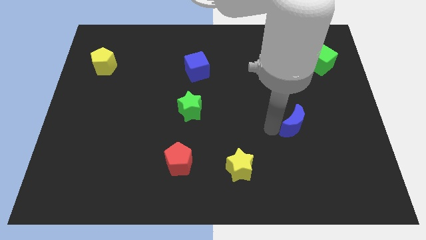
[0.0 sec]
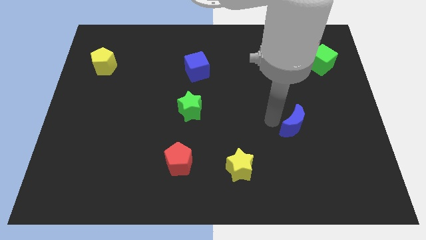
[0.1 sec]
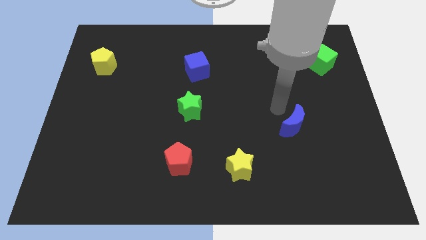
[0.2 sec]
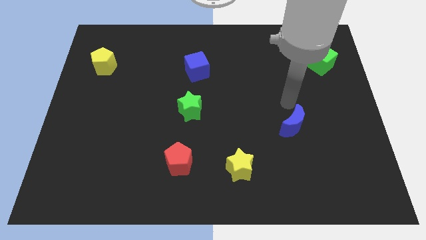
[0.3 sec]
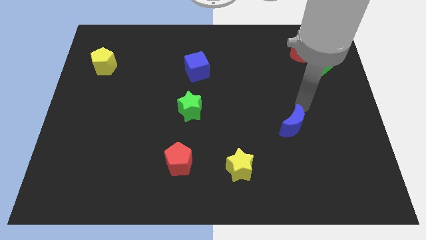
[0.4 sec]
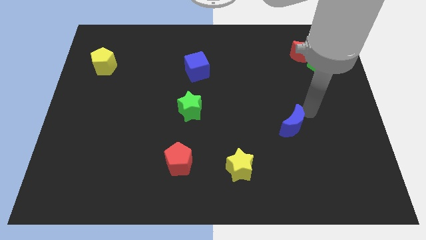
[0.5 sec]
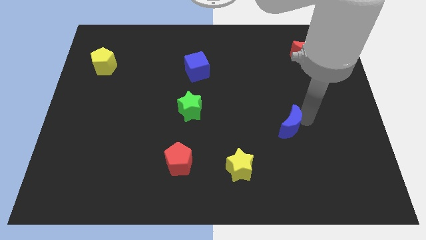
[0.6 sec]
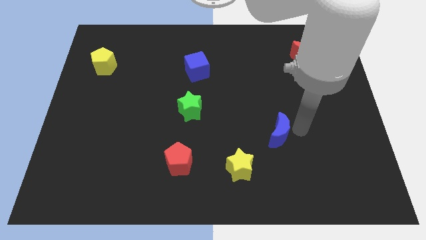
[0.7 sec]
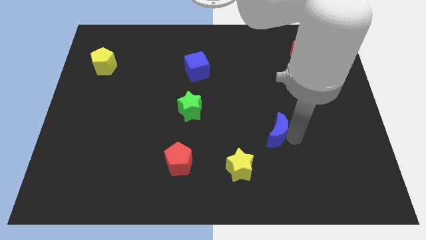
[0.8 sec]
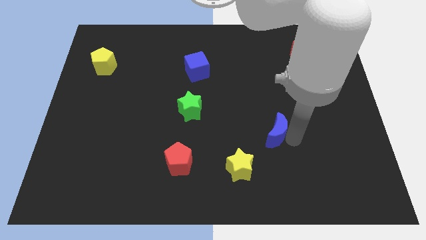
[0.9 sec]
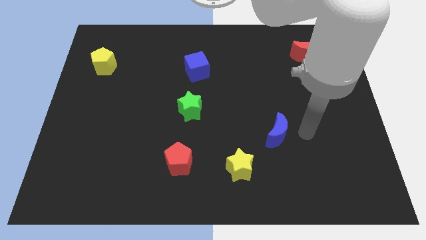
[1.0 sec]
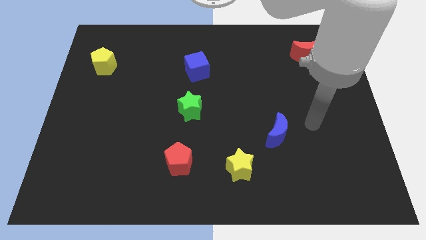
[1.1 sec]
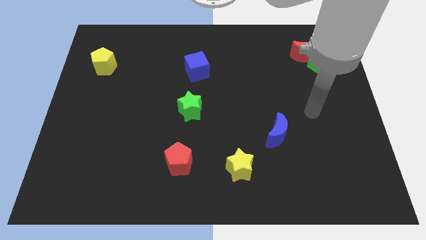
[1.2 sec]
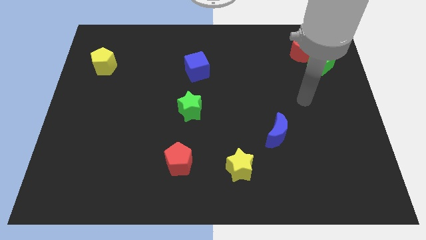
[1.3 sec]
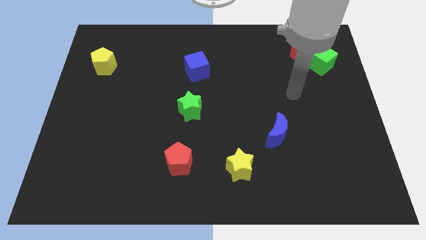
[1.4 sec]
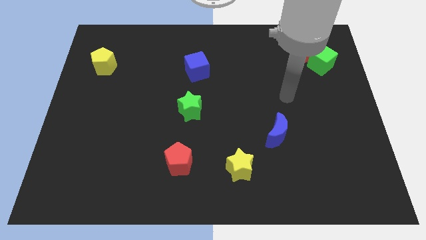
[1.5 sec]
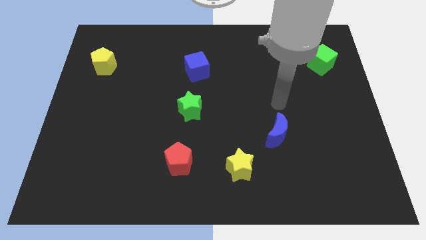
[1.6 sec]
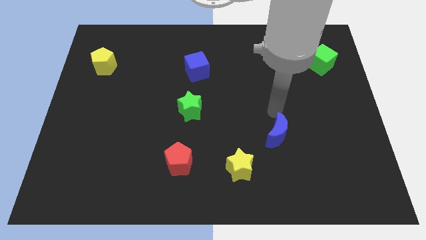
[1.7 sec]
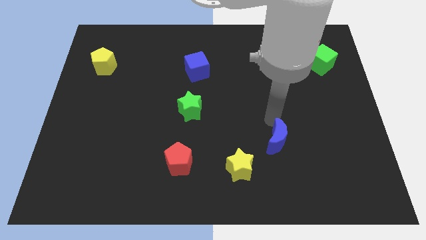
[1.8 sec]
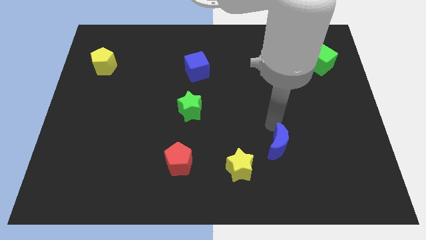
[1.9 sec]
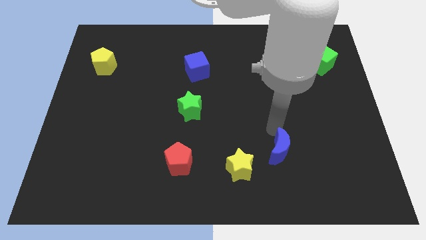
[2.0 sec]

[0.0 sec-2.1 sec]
slide the blue moon slightly down

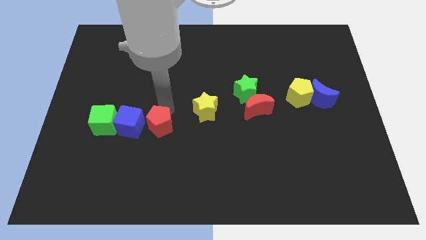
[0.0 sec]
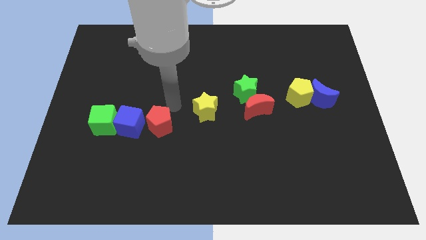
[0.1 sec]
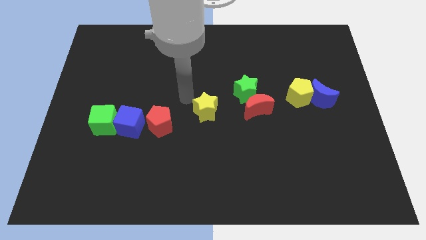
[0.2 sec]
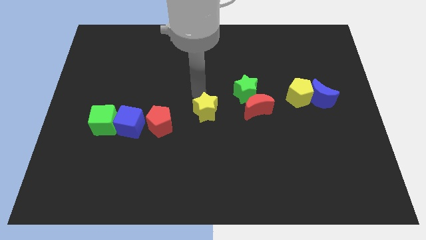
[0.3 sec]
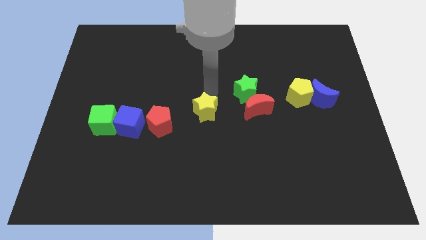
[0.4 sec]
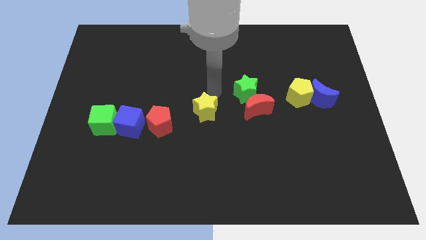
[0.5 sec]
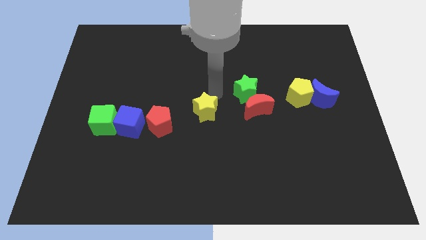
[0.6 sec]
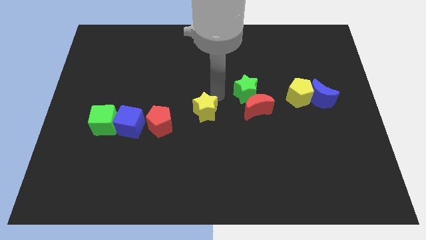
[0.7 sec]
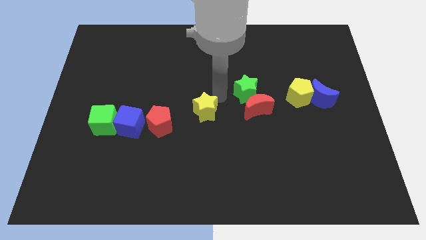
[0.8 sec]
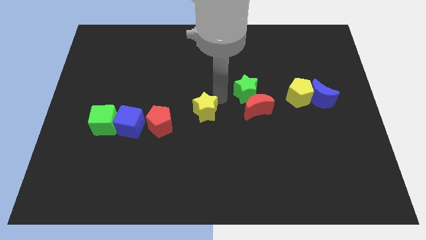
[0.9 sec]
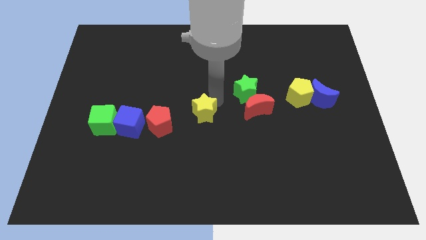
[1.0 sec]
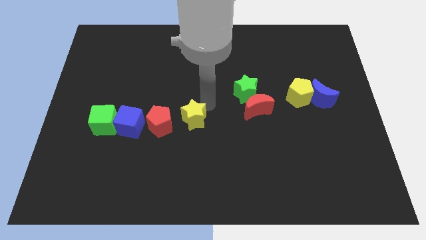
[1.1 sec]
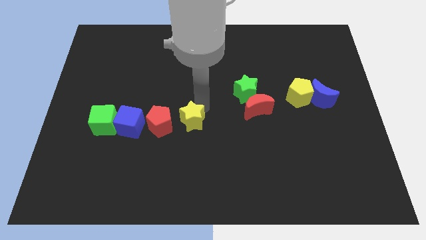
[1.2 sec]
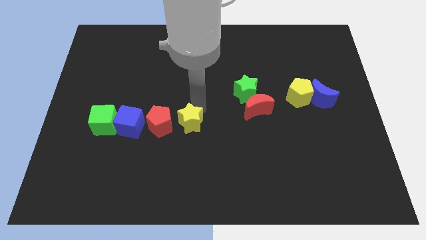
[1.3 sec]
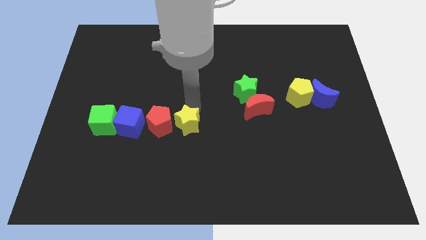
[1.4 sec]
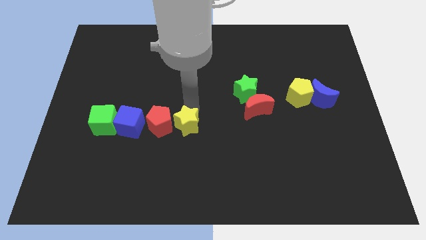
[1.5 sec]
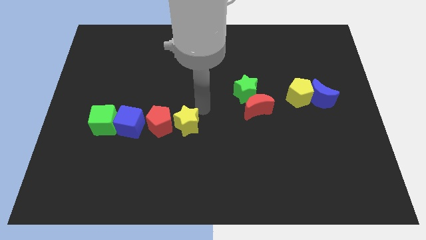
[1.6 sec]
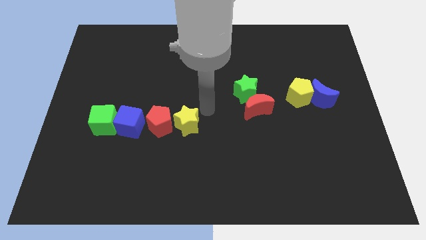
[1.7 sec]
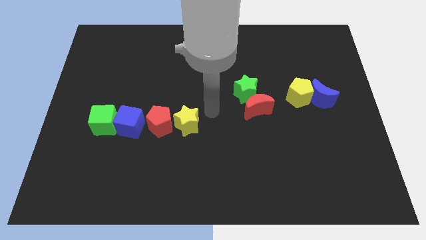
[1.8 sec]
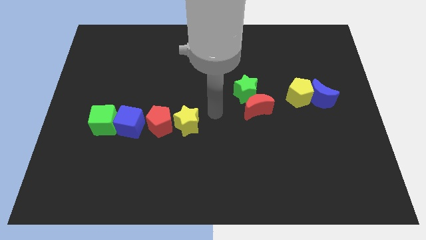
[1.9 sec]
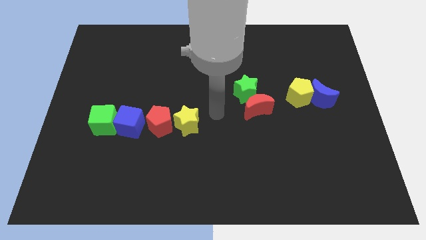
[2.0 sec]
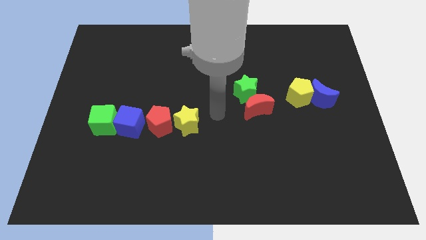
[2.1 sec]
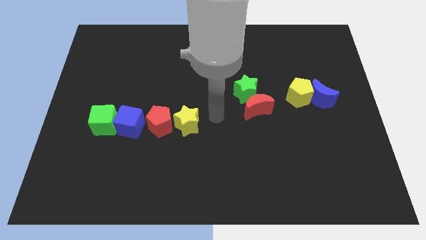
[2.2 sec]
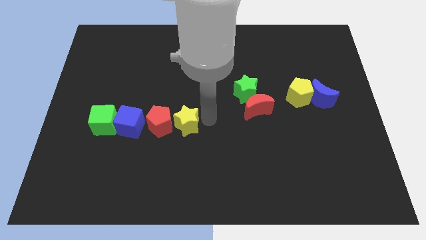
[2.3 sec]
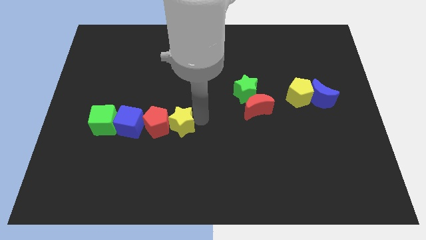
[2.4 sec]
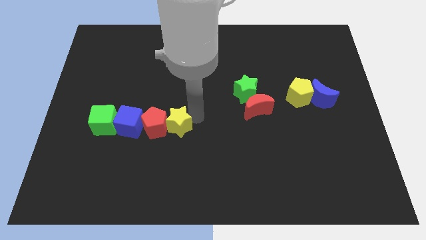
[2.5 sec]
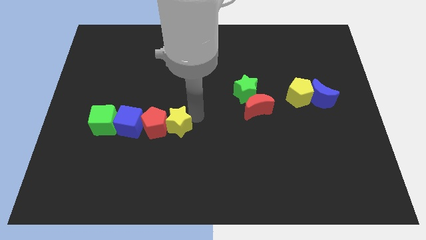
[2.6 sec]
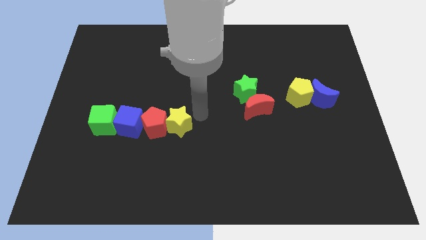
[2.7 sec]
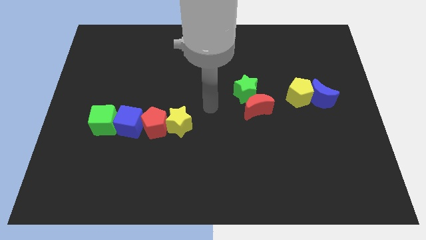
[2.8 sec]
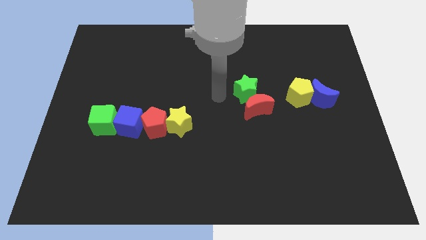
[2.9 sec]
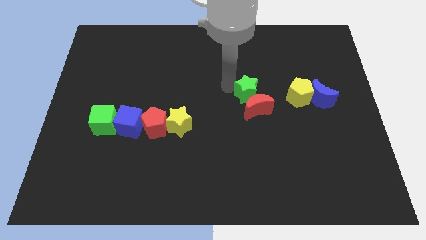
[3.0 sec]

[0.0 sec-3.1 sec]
move the yellow star into the red pentagon to form a horizontal line of blocks

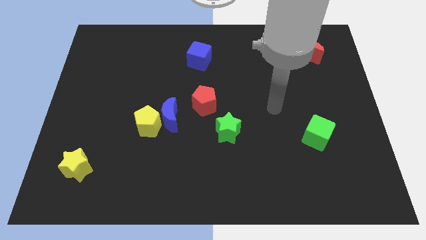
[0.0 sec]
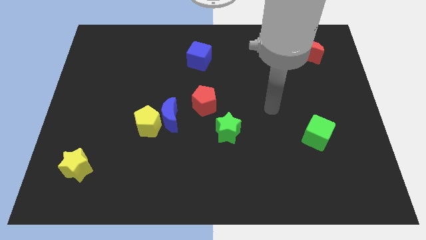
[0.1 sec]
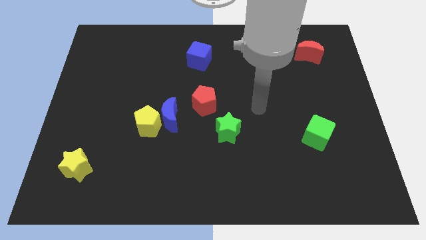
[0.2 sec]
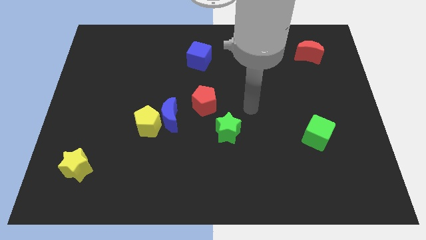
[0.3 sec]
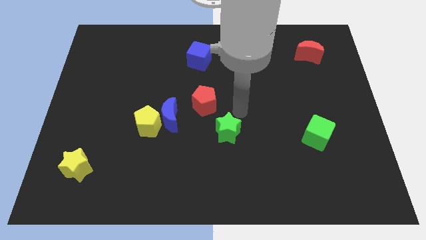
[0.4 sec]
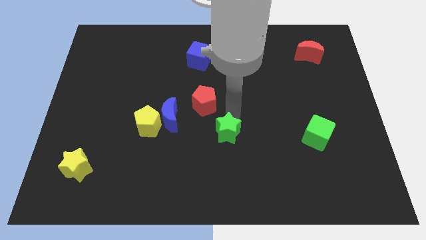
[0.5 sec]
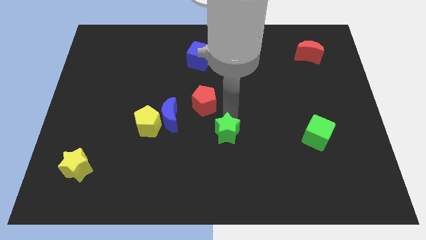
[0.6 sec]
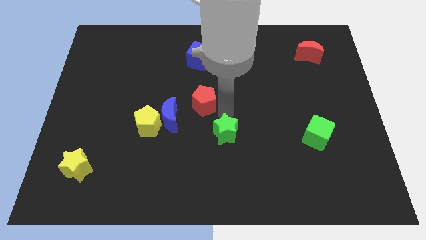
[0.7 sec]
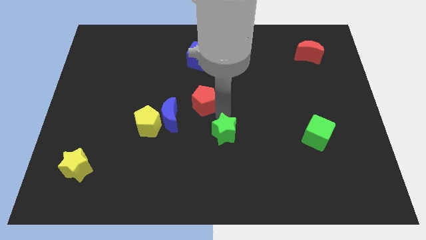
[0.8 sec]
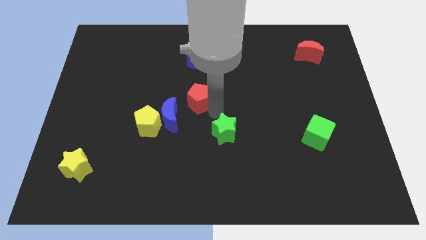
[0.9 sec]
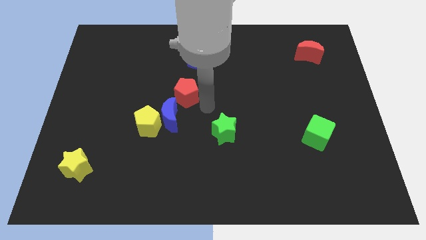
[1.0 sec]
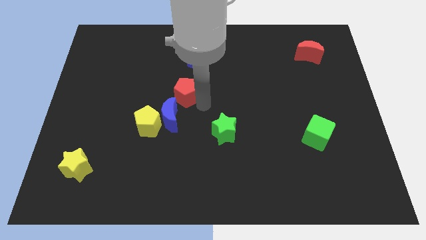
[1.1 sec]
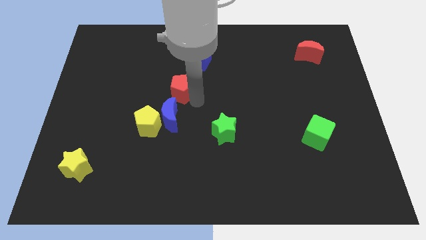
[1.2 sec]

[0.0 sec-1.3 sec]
slide the red pentagon above the blue moon

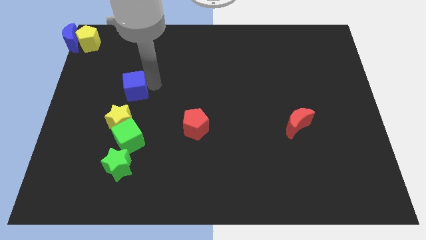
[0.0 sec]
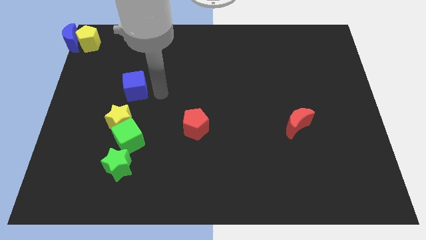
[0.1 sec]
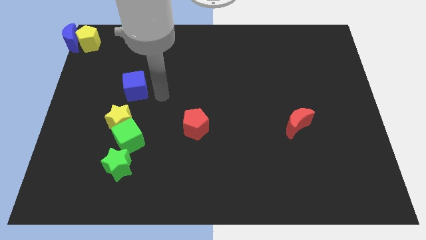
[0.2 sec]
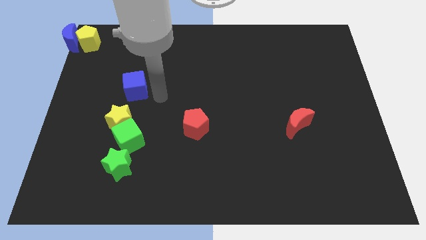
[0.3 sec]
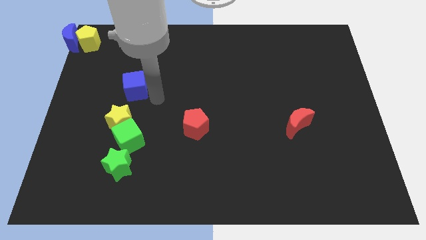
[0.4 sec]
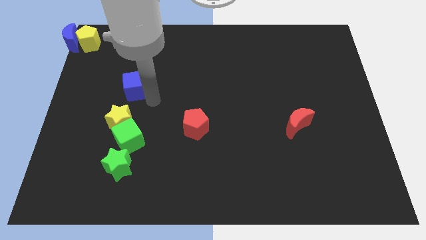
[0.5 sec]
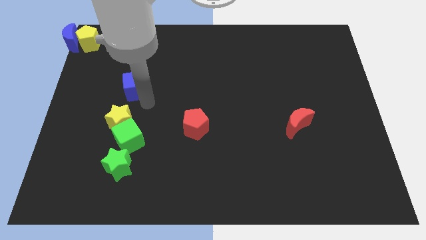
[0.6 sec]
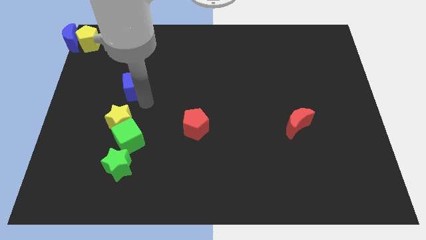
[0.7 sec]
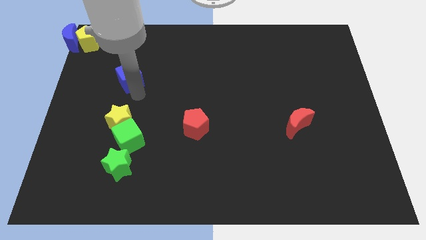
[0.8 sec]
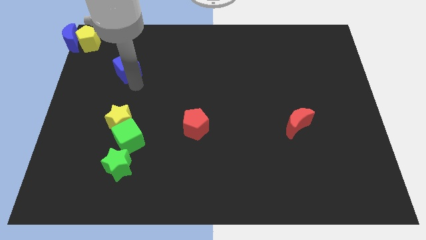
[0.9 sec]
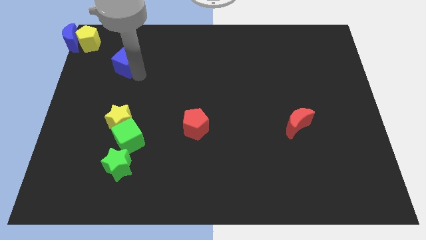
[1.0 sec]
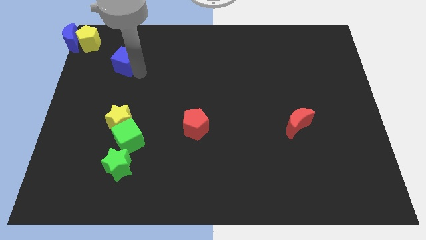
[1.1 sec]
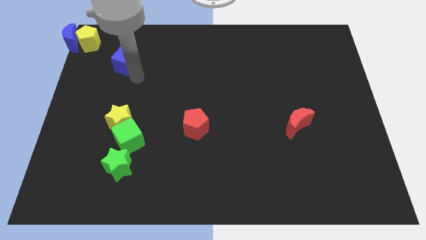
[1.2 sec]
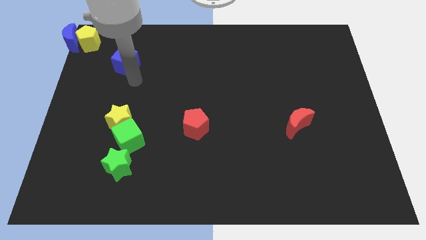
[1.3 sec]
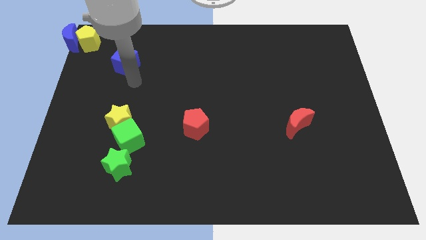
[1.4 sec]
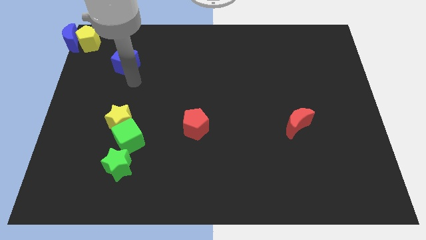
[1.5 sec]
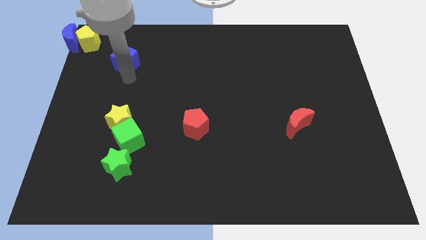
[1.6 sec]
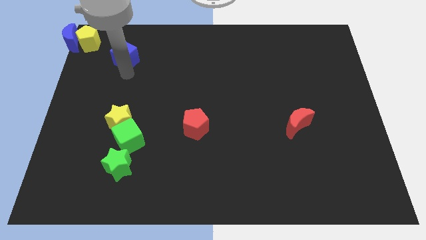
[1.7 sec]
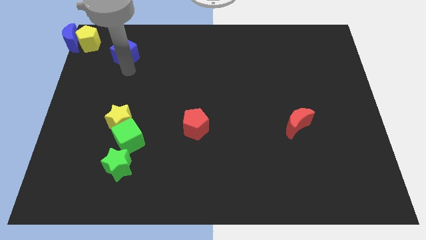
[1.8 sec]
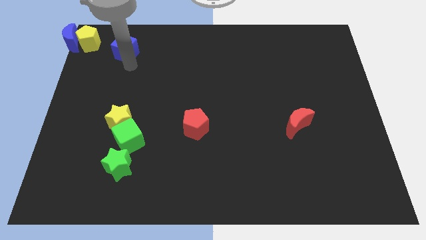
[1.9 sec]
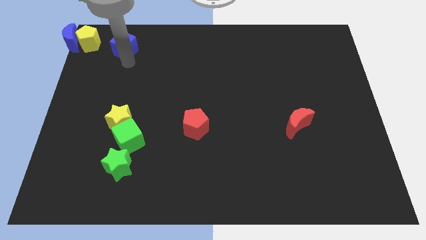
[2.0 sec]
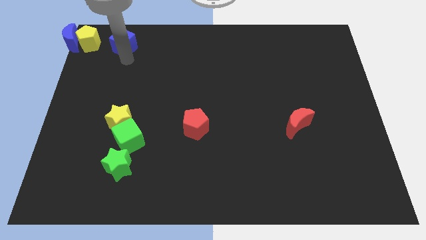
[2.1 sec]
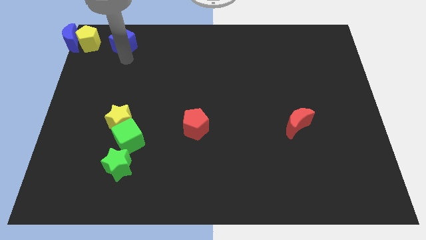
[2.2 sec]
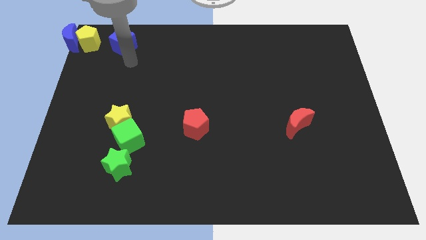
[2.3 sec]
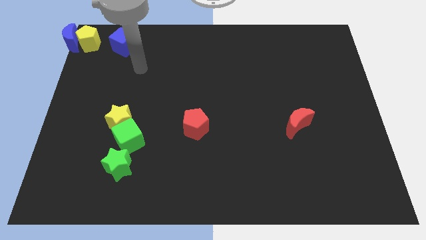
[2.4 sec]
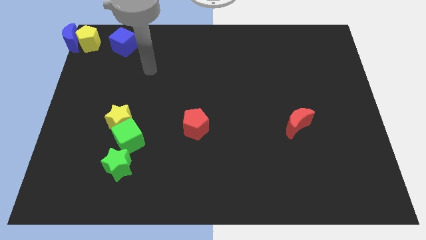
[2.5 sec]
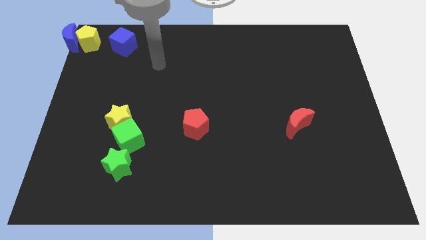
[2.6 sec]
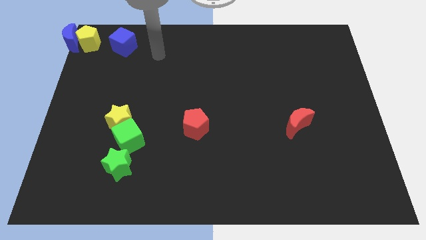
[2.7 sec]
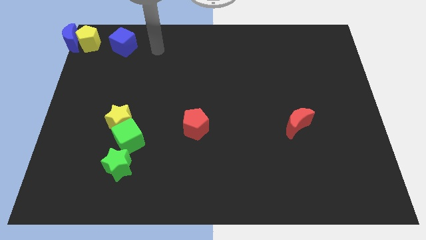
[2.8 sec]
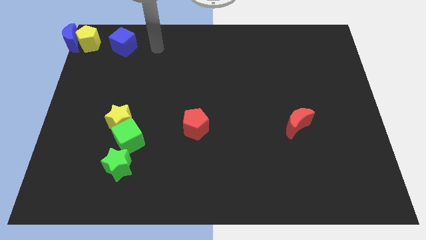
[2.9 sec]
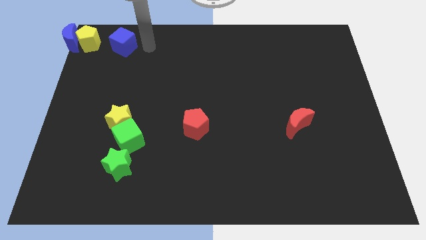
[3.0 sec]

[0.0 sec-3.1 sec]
place the blue cube to the right side of yellow pentagon
